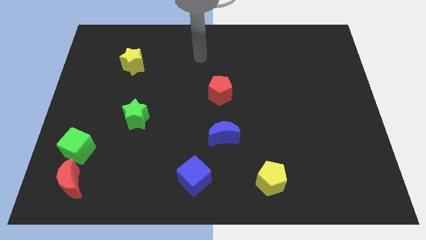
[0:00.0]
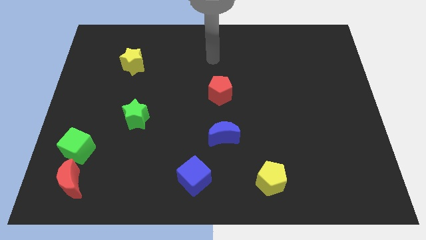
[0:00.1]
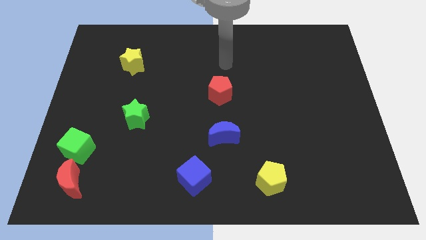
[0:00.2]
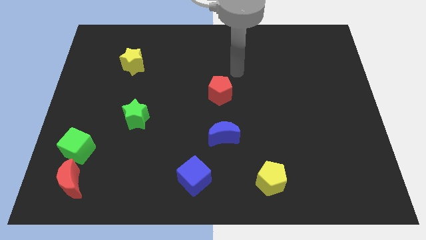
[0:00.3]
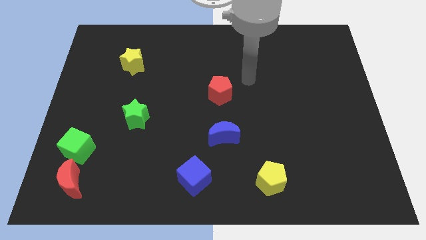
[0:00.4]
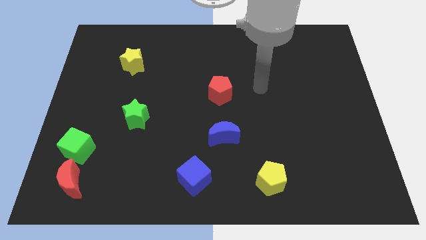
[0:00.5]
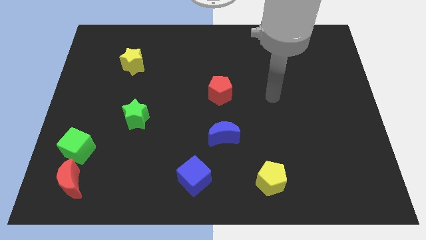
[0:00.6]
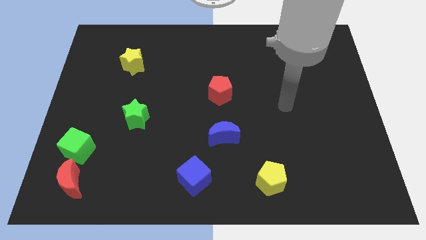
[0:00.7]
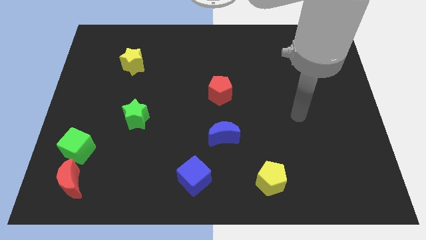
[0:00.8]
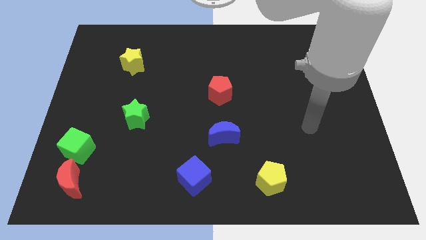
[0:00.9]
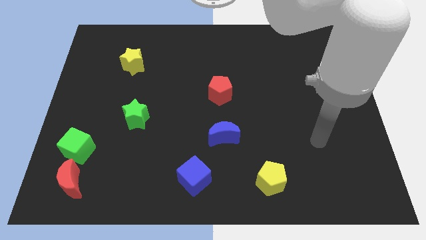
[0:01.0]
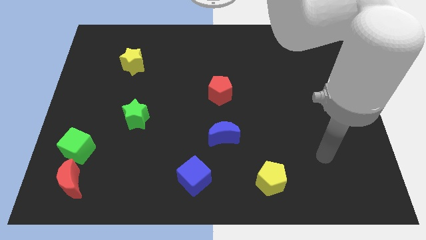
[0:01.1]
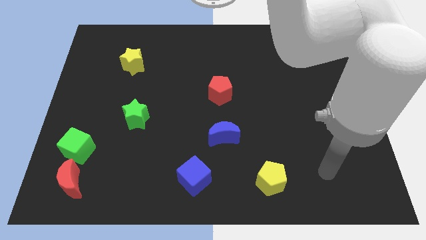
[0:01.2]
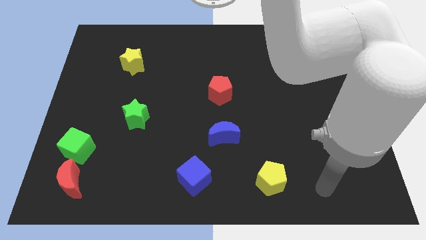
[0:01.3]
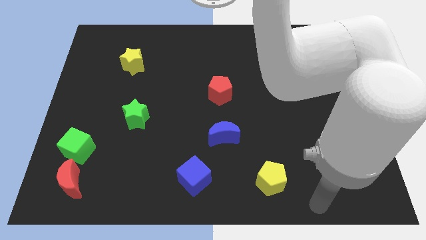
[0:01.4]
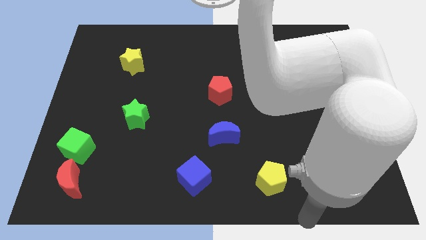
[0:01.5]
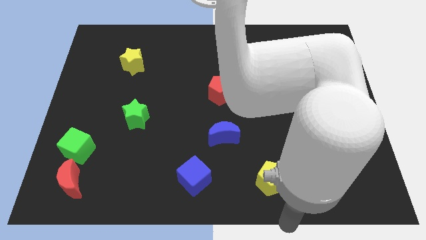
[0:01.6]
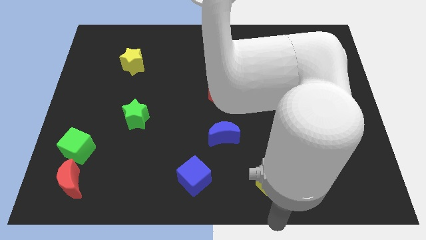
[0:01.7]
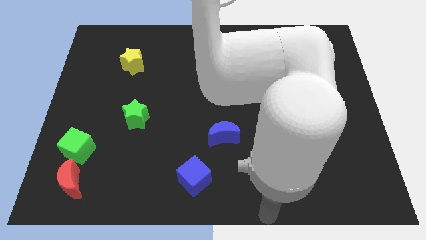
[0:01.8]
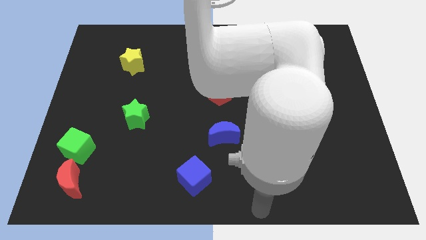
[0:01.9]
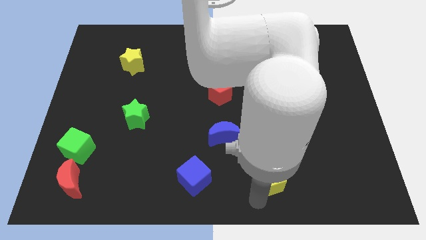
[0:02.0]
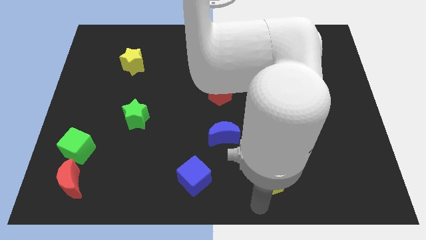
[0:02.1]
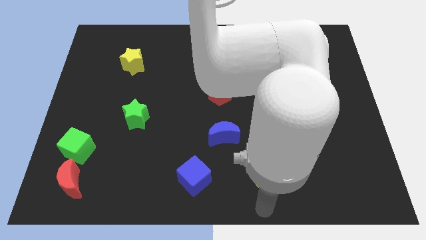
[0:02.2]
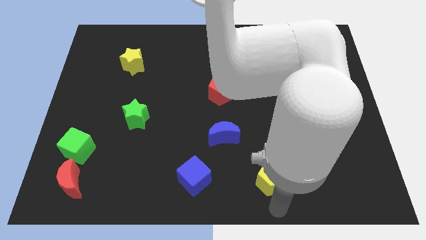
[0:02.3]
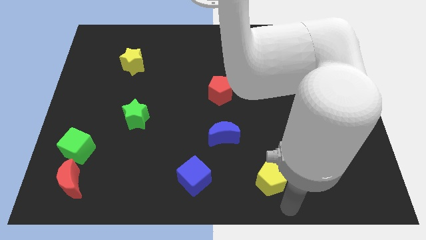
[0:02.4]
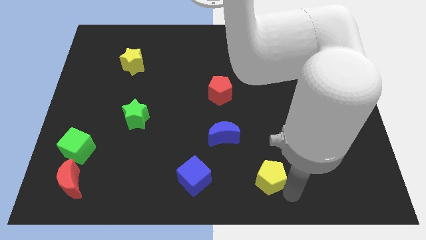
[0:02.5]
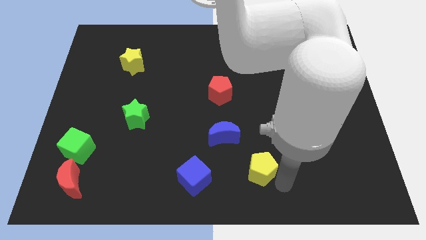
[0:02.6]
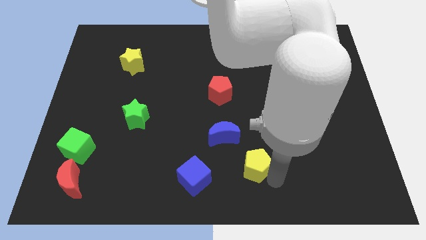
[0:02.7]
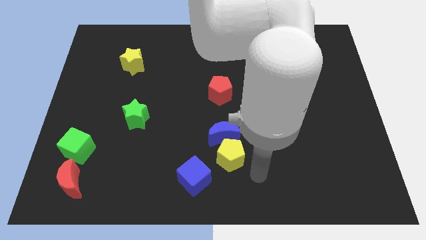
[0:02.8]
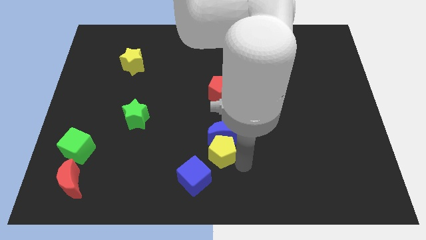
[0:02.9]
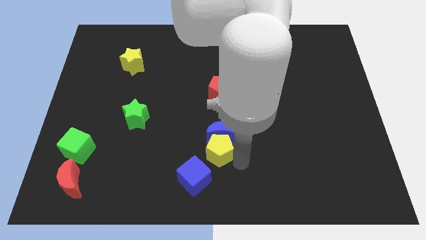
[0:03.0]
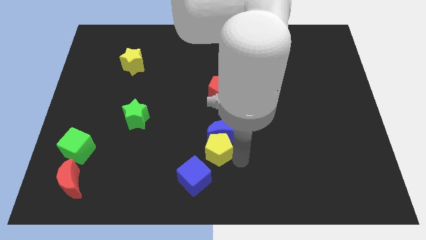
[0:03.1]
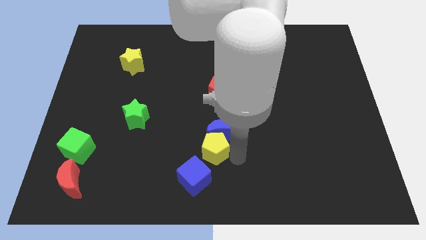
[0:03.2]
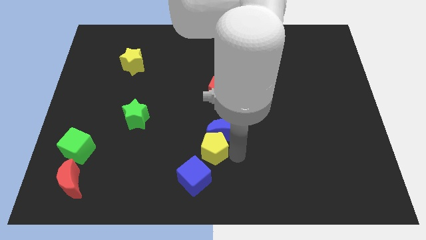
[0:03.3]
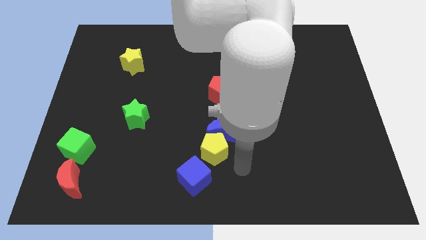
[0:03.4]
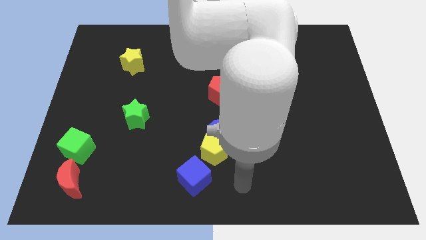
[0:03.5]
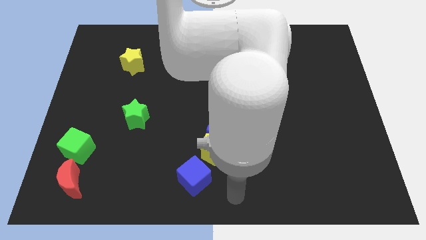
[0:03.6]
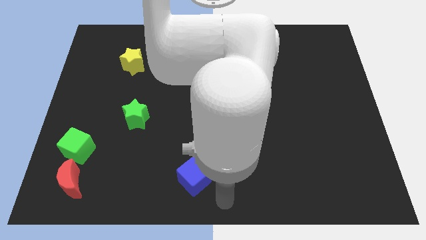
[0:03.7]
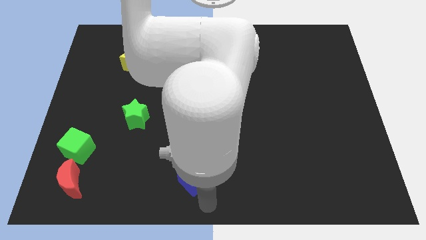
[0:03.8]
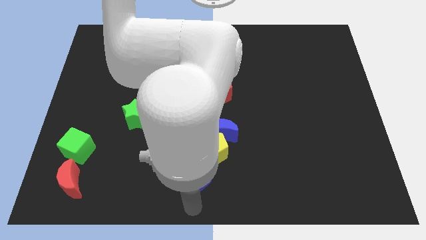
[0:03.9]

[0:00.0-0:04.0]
place the yellow pentagon in between the blue cube and blue crescent

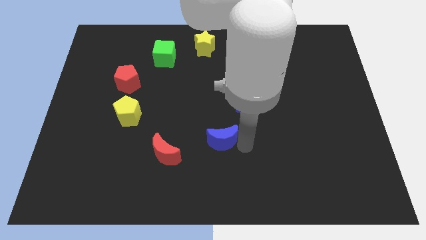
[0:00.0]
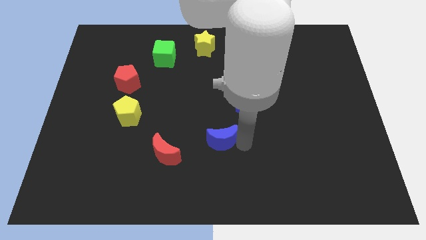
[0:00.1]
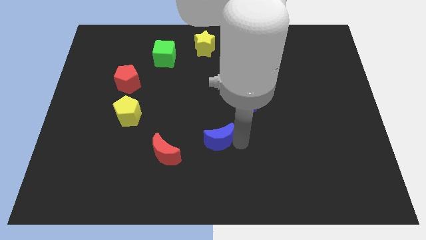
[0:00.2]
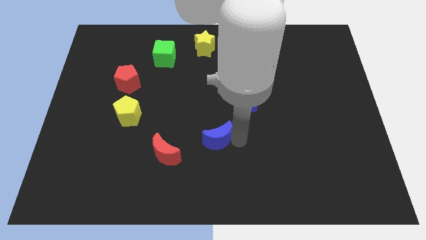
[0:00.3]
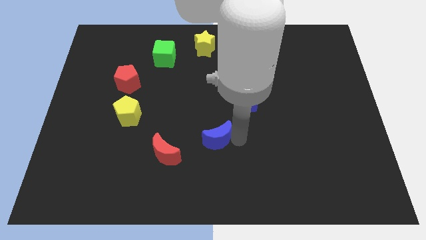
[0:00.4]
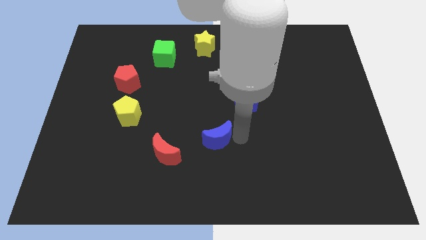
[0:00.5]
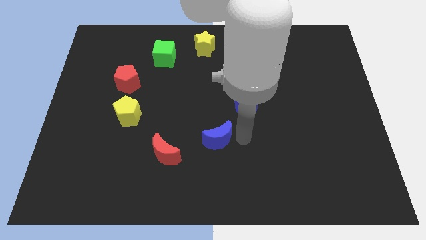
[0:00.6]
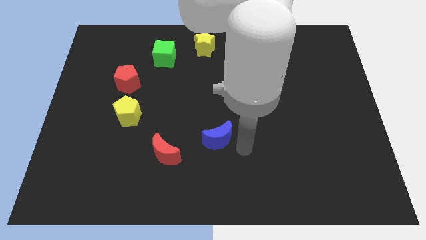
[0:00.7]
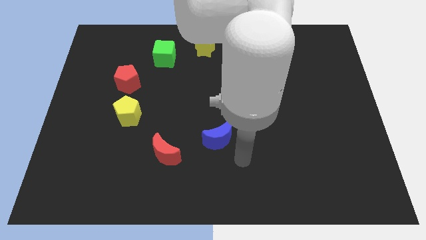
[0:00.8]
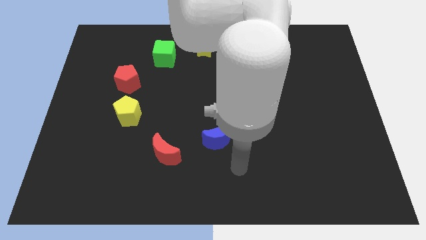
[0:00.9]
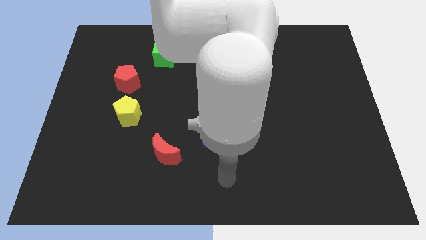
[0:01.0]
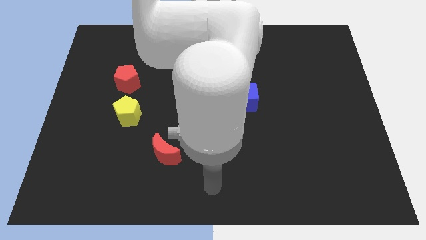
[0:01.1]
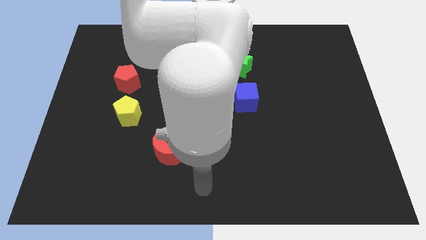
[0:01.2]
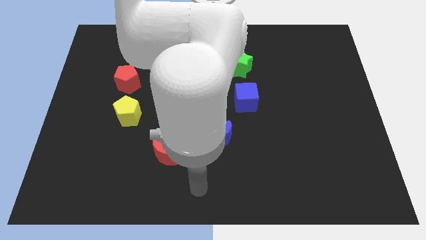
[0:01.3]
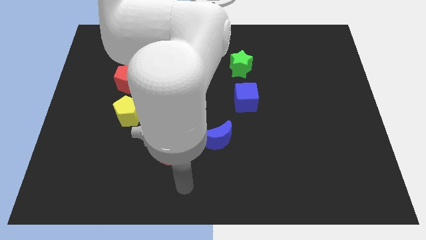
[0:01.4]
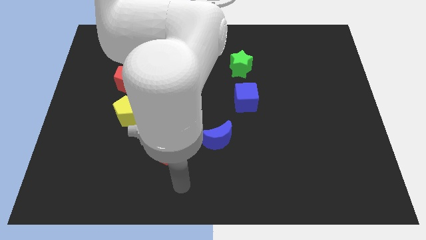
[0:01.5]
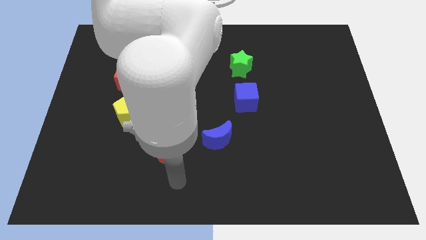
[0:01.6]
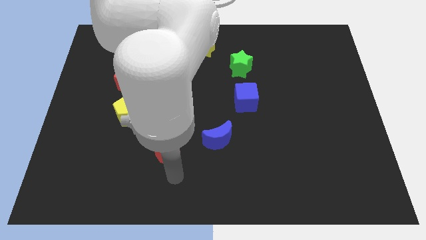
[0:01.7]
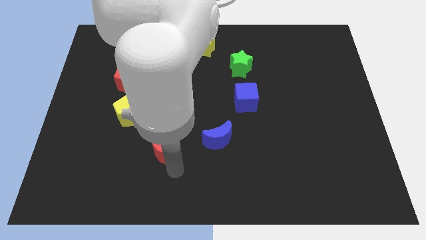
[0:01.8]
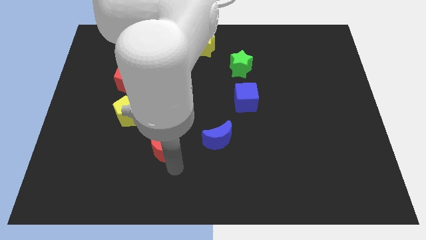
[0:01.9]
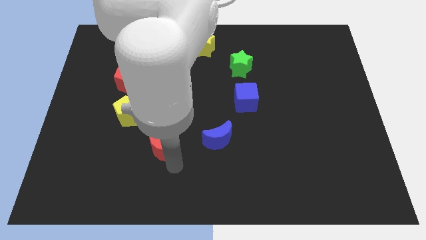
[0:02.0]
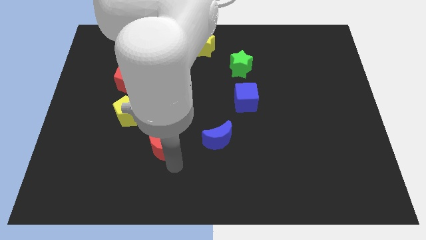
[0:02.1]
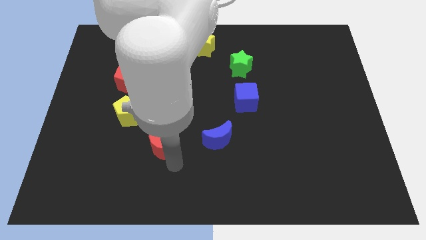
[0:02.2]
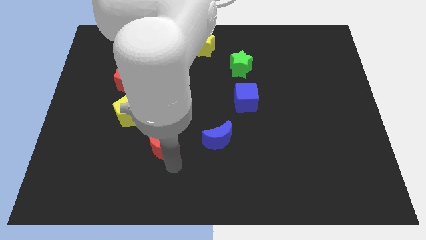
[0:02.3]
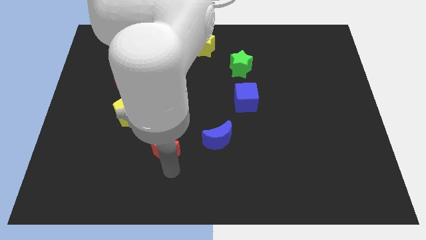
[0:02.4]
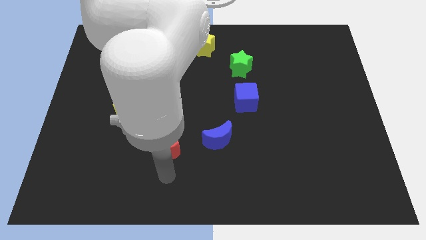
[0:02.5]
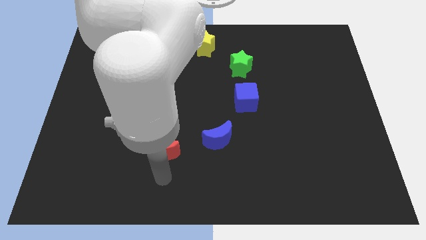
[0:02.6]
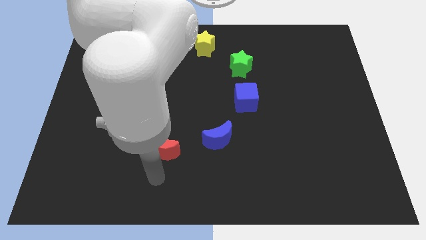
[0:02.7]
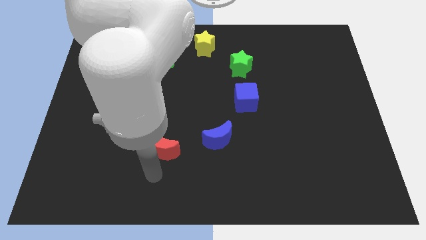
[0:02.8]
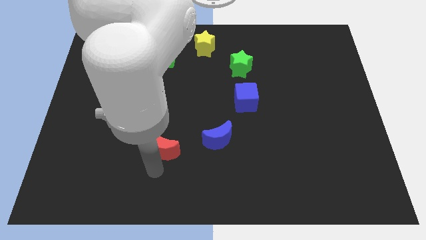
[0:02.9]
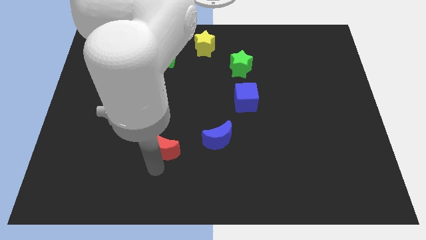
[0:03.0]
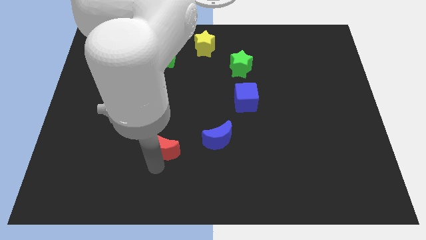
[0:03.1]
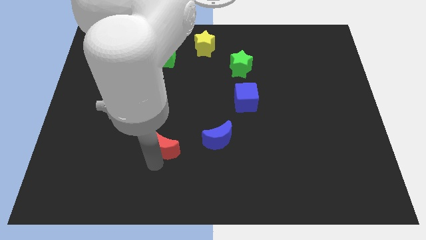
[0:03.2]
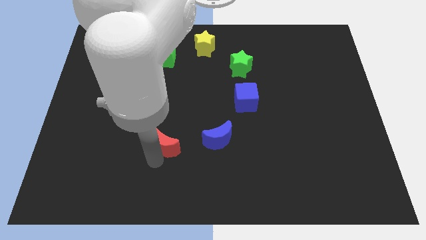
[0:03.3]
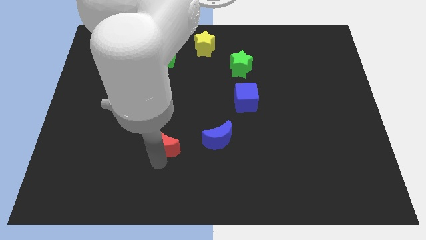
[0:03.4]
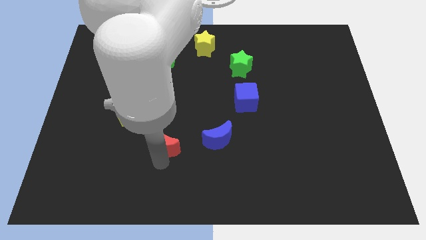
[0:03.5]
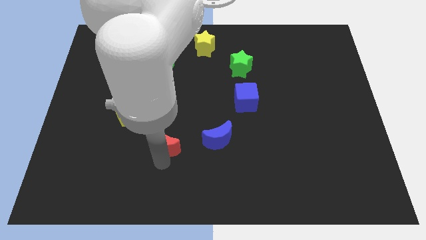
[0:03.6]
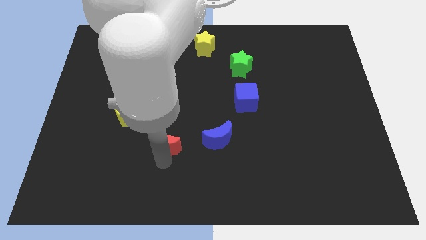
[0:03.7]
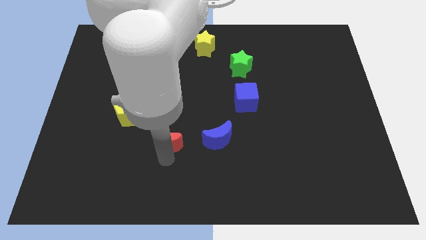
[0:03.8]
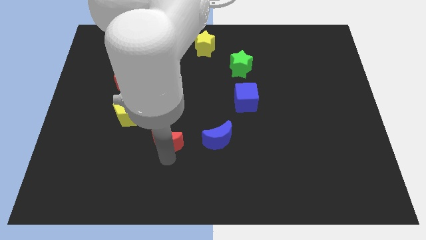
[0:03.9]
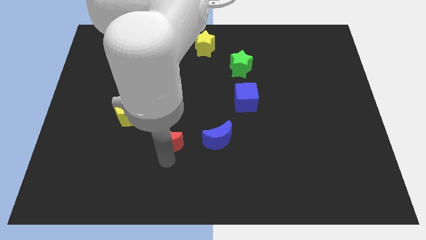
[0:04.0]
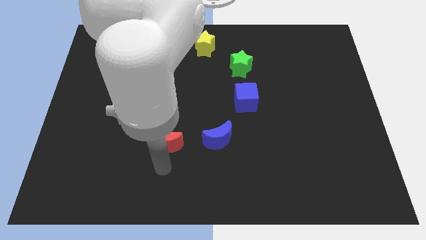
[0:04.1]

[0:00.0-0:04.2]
place the red crescent horizontally to the left side of the blue crescent

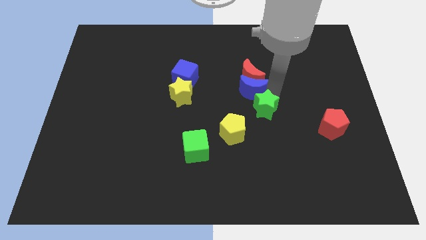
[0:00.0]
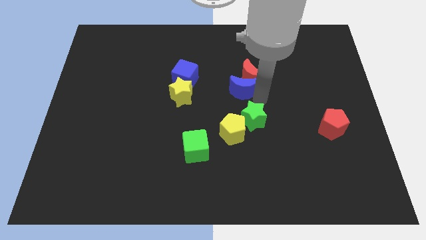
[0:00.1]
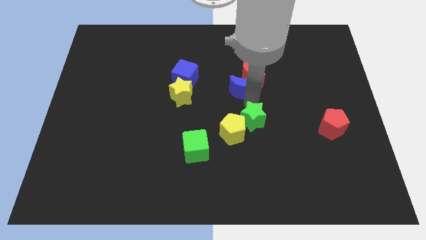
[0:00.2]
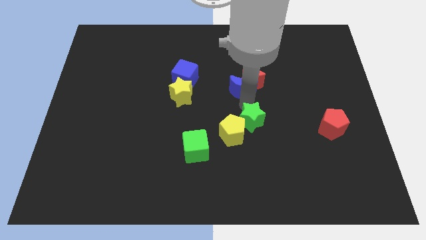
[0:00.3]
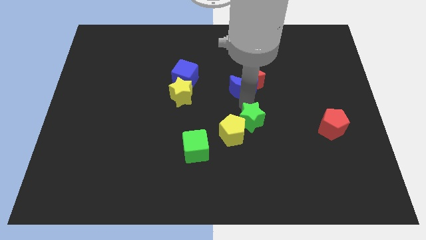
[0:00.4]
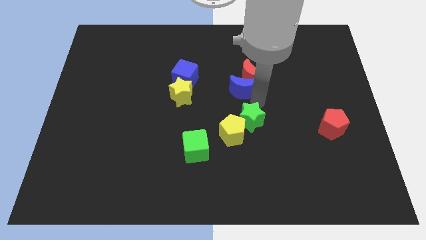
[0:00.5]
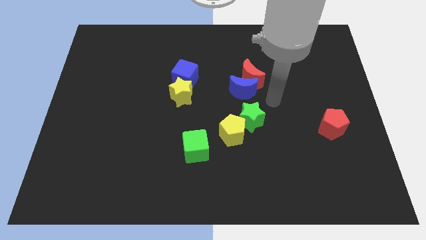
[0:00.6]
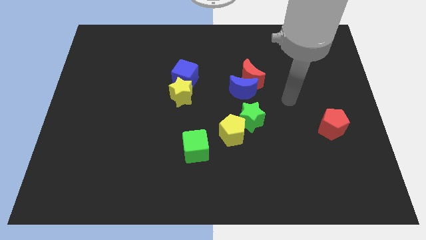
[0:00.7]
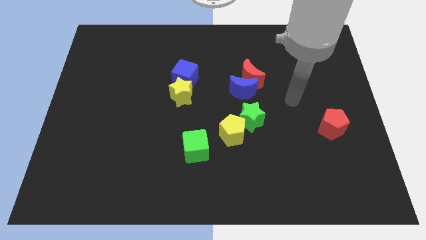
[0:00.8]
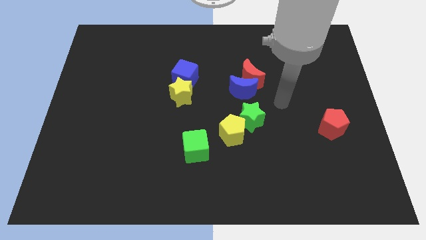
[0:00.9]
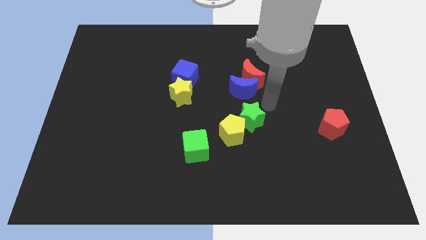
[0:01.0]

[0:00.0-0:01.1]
place the green star diagonally on the top right of the yellow pentagon
